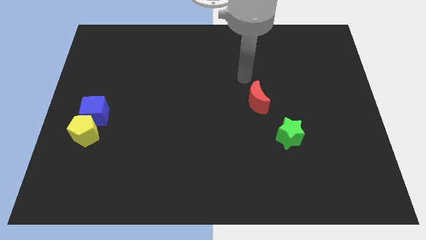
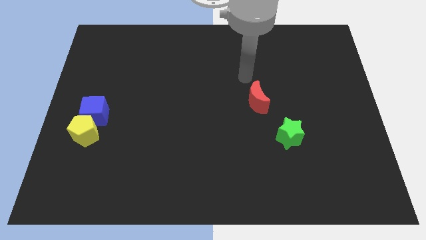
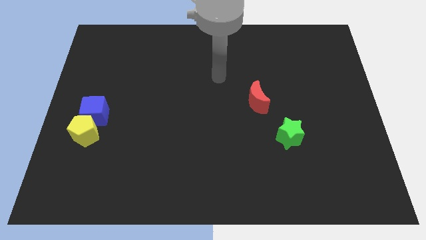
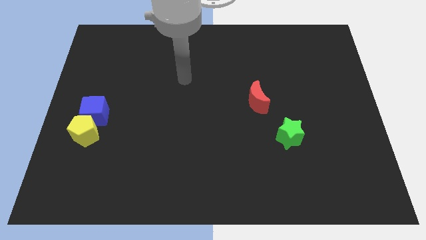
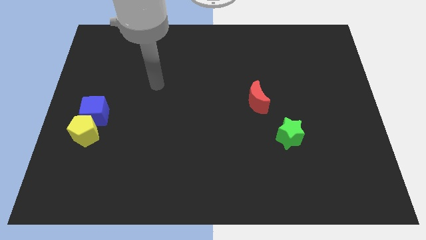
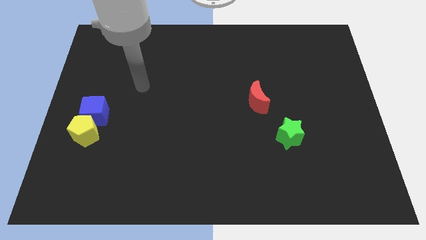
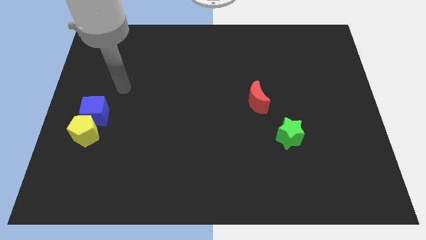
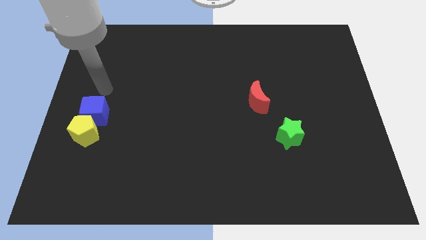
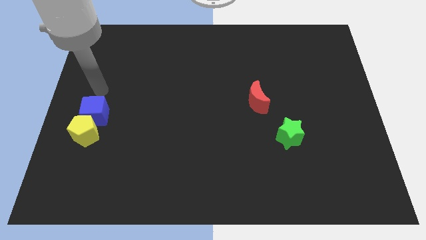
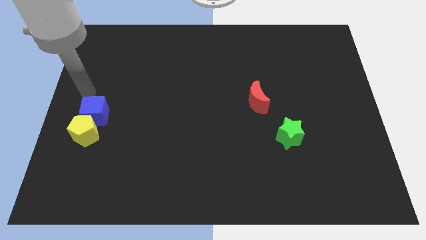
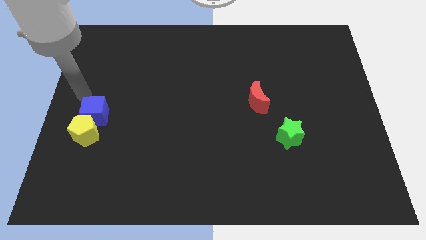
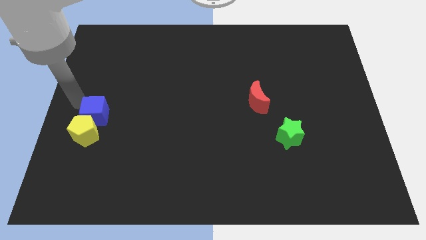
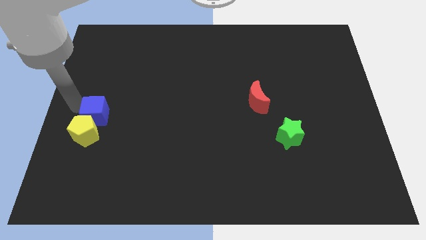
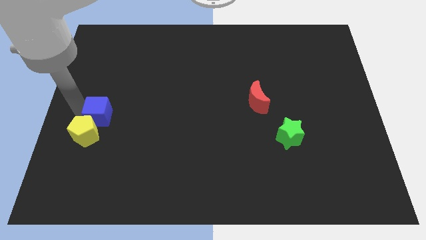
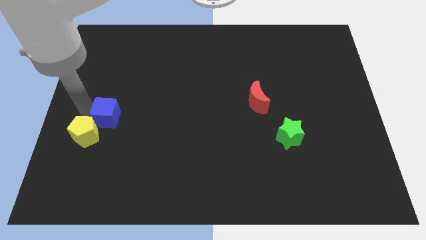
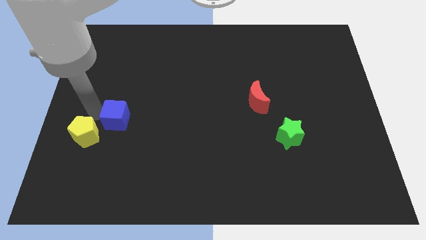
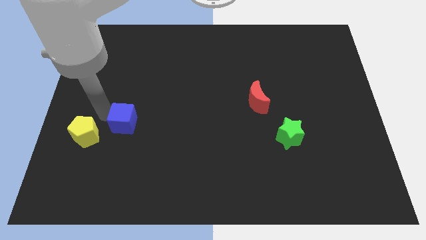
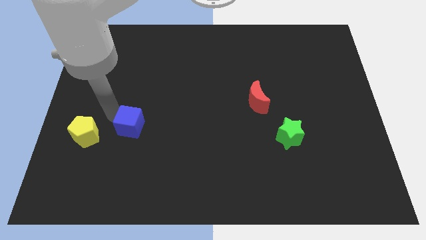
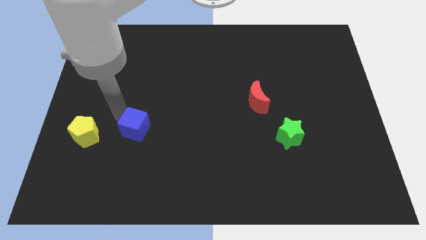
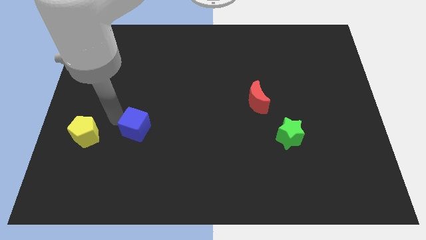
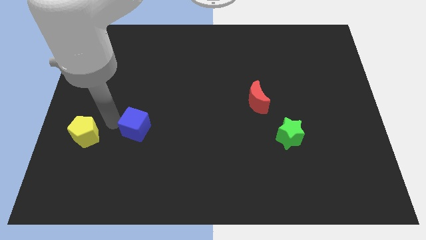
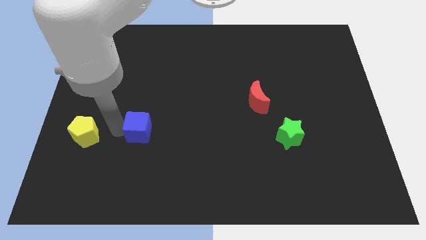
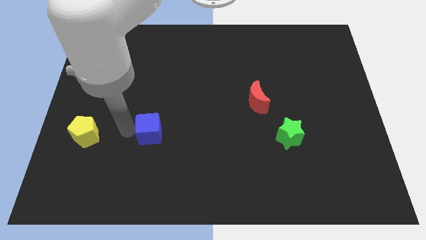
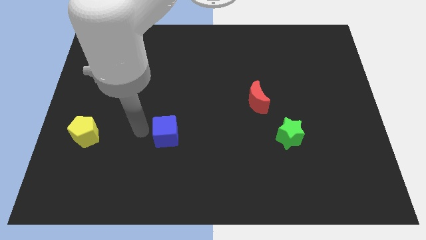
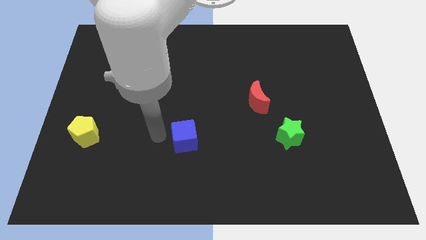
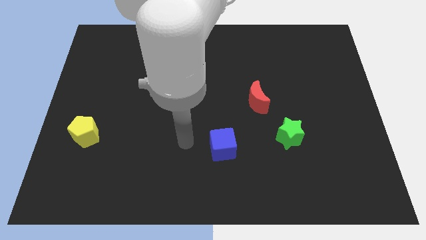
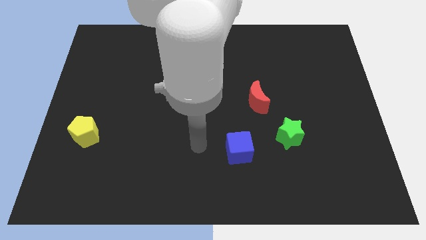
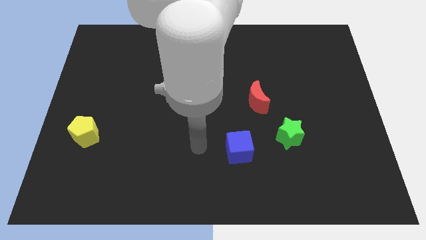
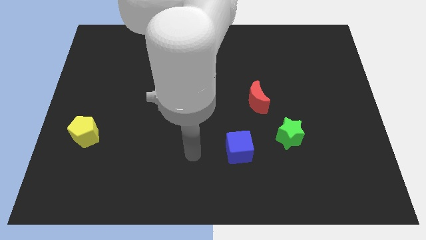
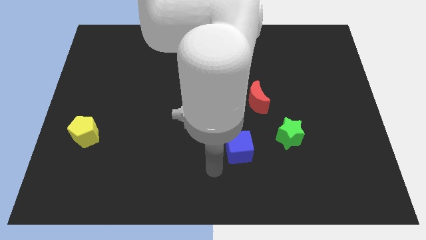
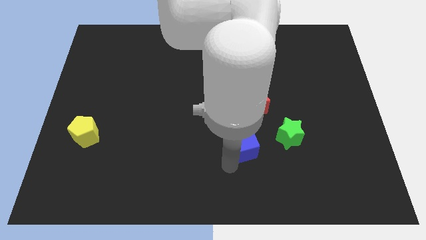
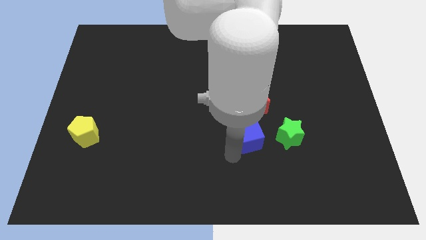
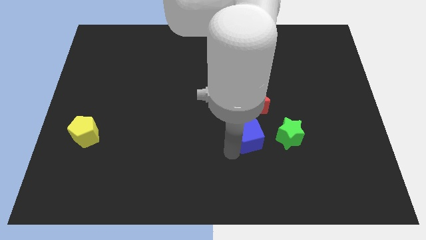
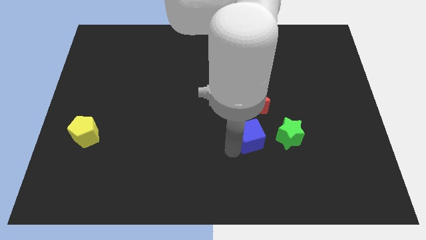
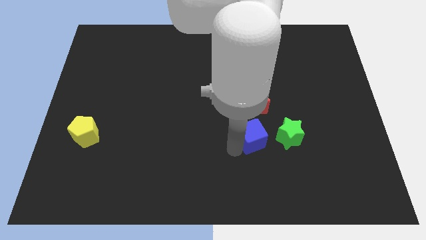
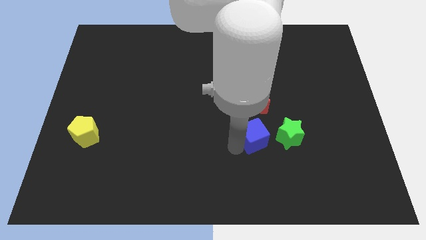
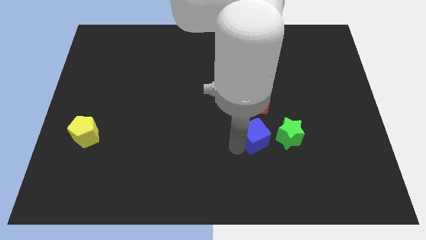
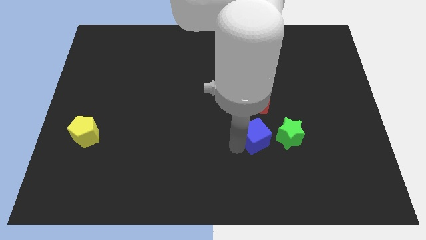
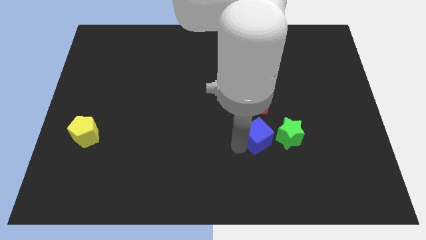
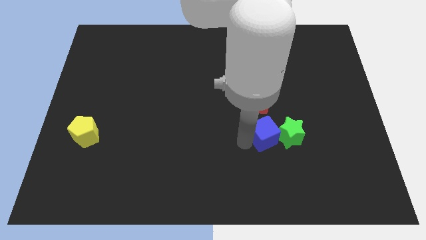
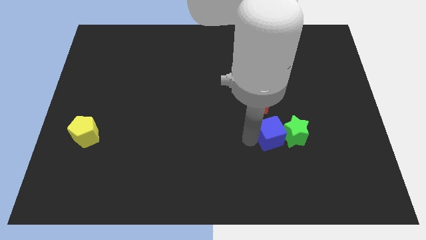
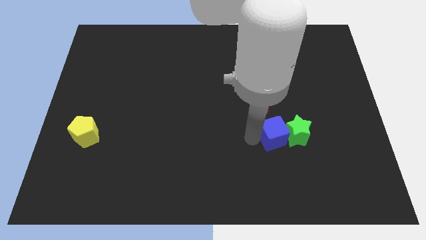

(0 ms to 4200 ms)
push the cube towards the star

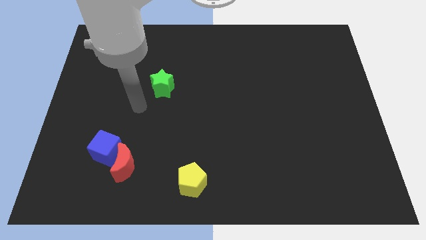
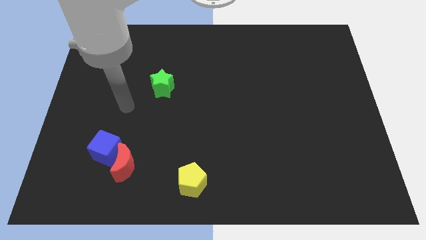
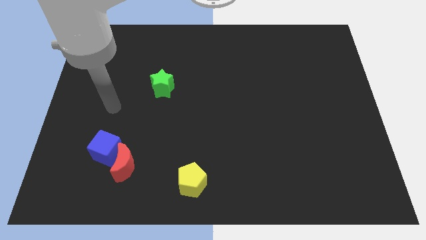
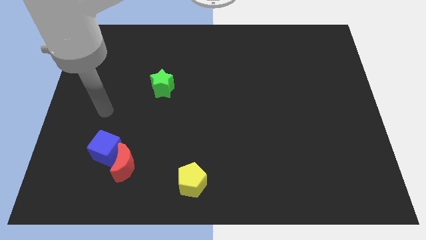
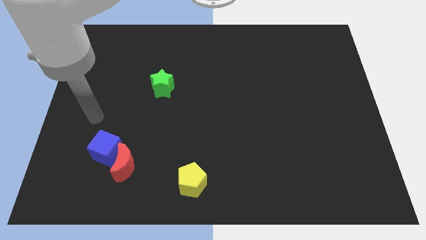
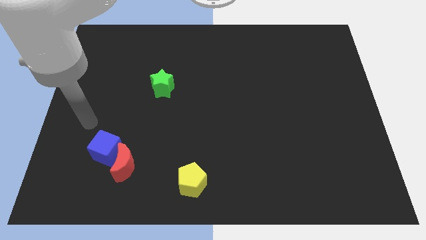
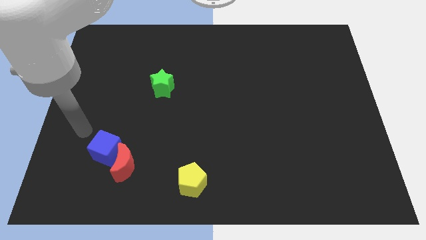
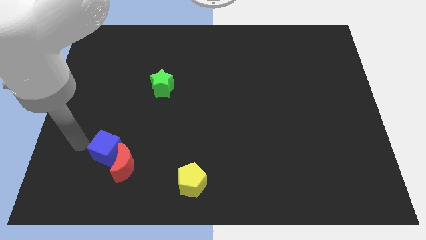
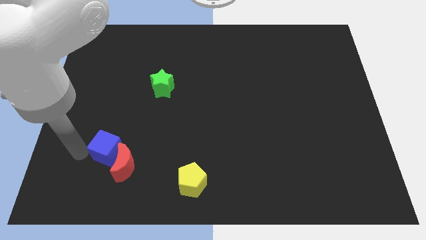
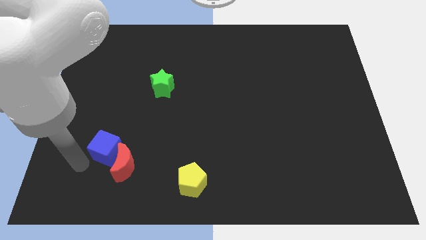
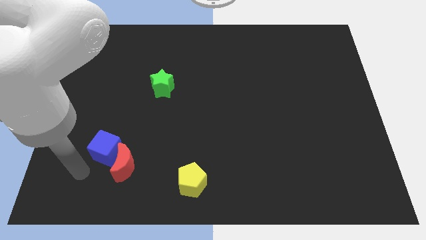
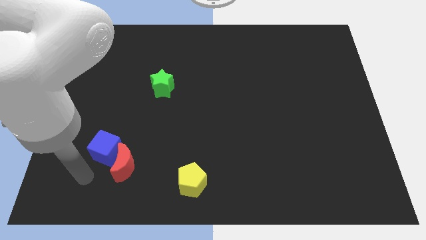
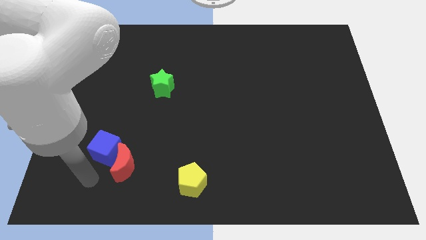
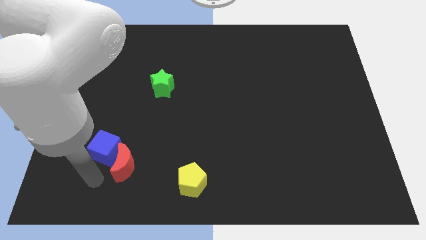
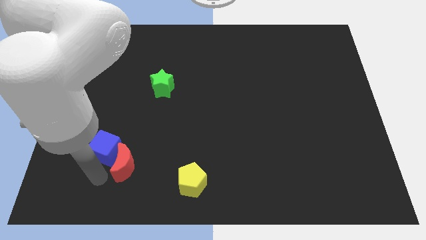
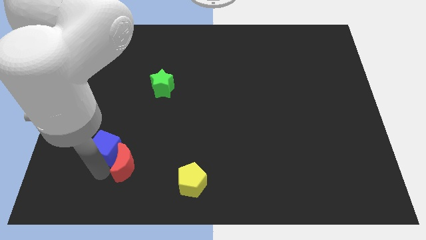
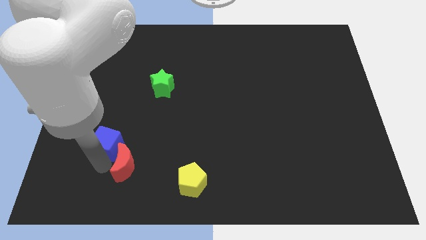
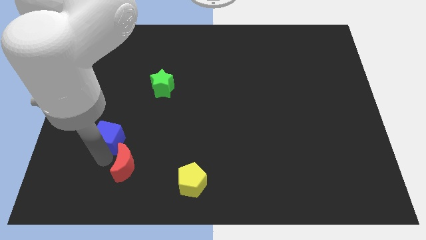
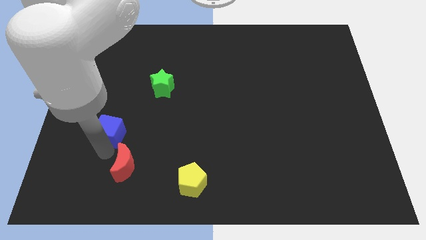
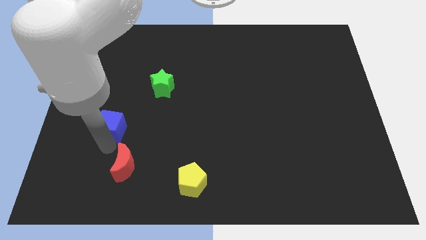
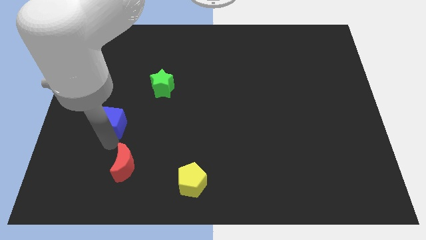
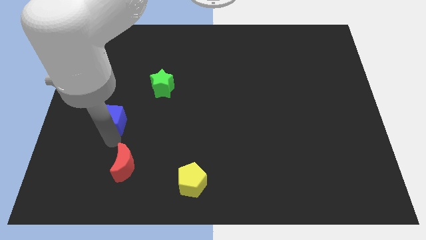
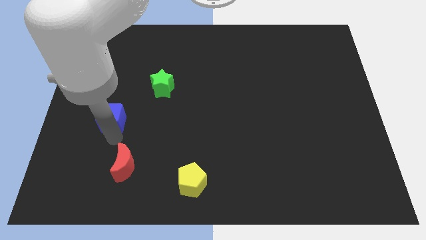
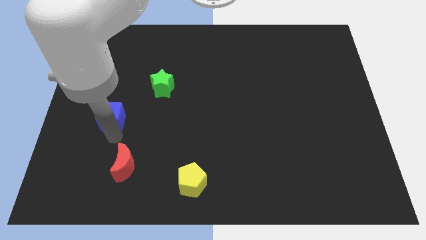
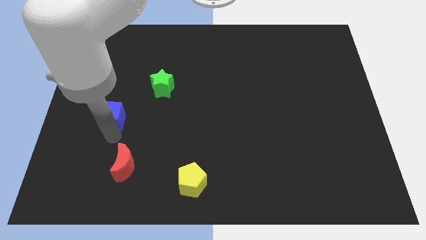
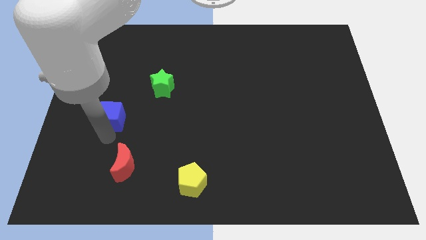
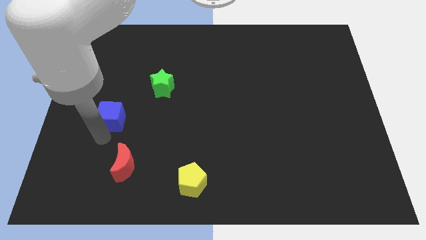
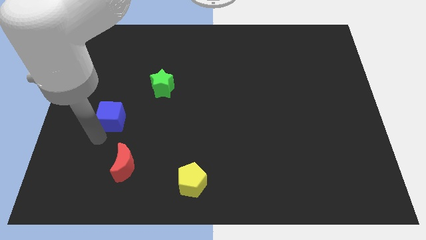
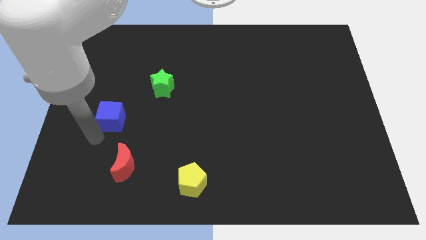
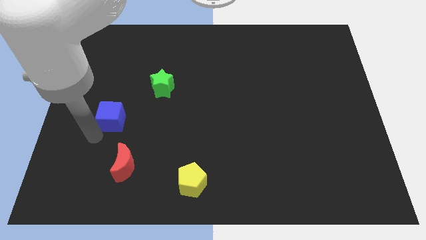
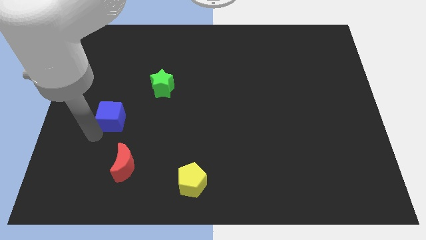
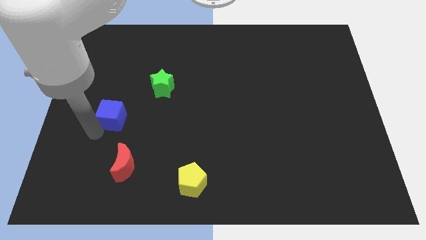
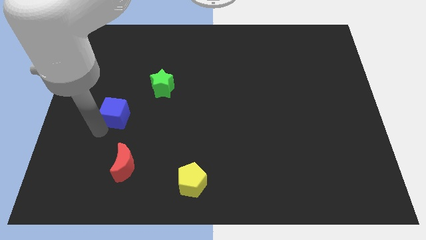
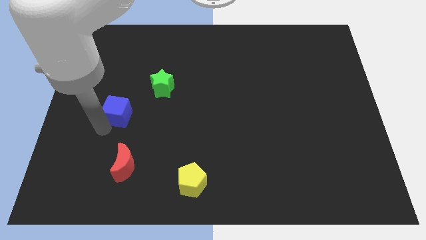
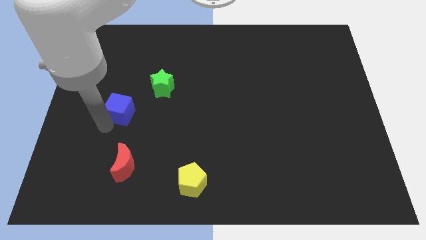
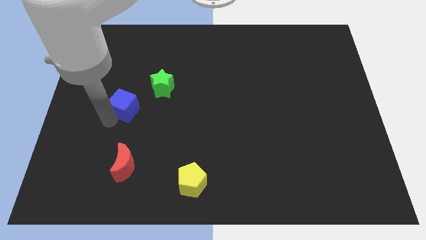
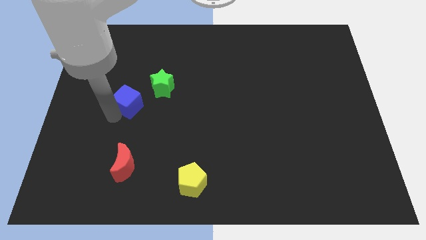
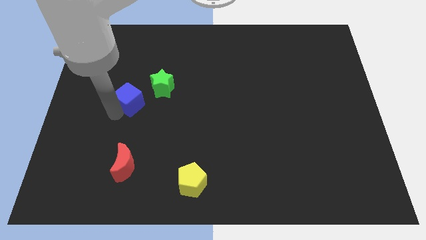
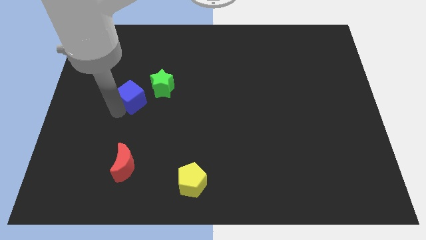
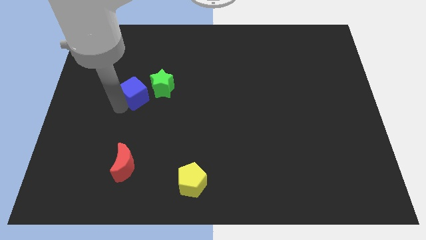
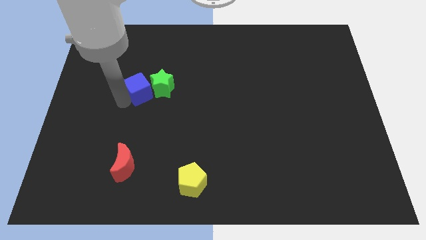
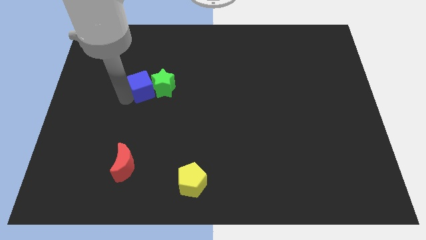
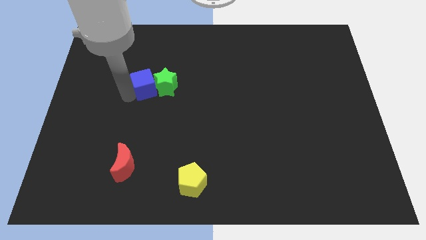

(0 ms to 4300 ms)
put the blue cube next to the green star

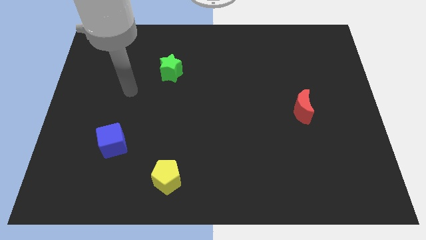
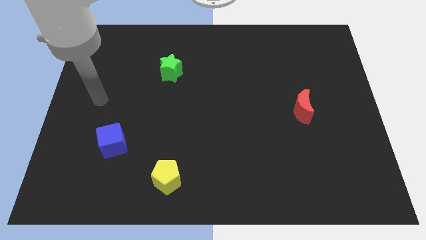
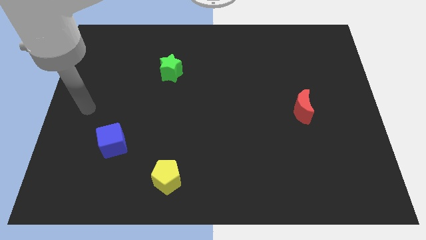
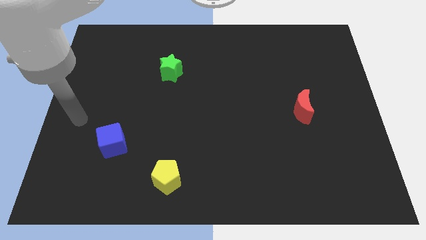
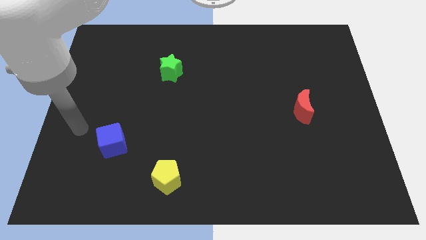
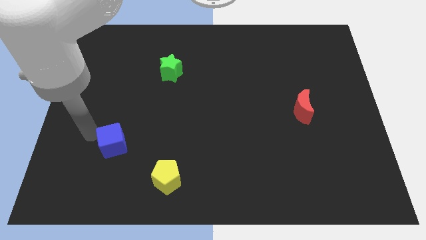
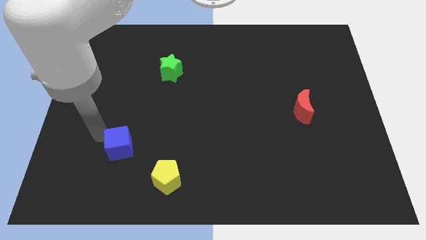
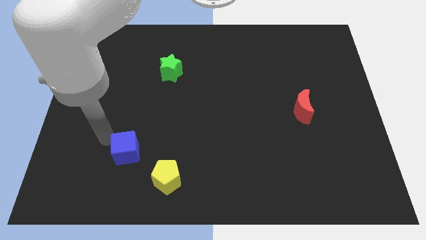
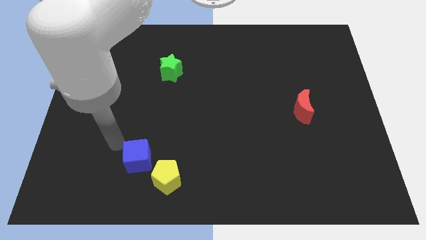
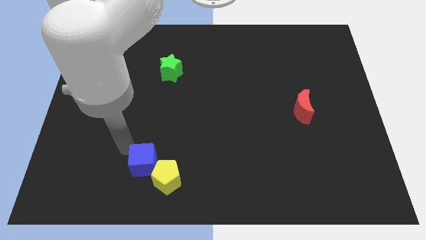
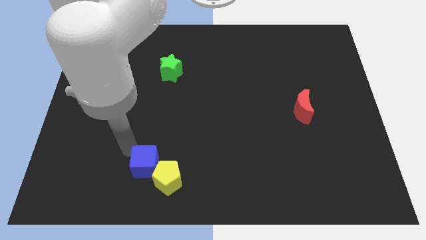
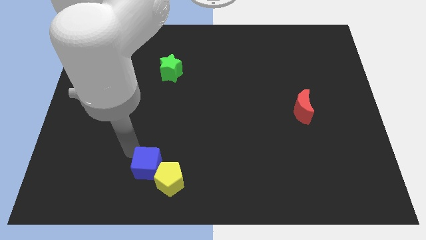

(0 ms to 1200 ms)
move the blue cube towards the pentagon
